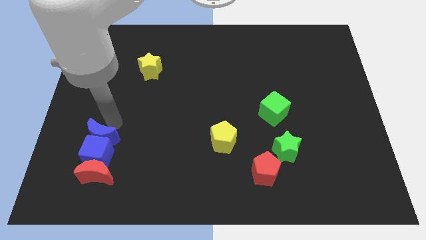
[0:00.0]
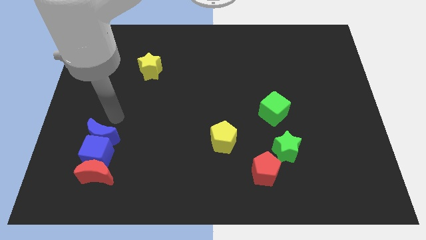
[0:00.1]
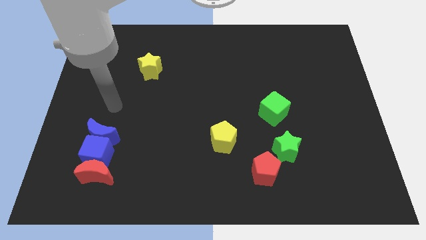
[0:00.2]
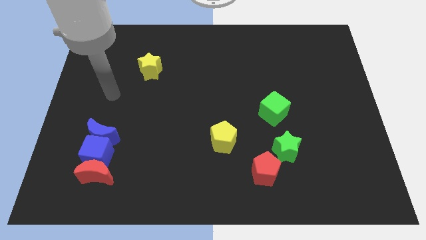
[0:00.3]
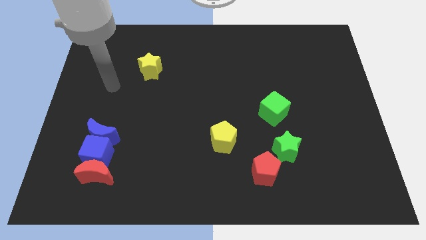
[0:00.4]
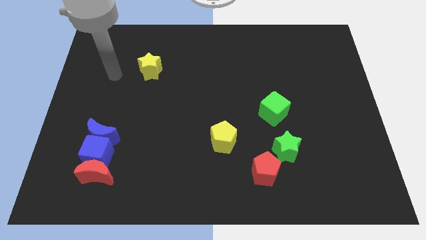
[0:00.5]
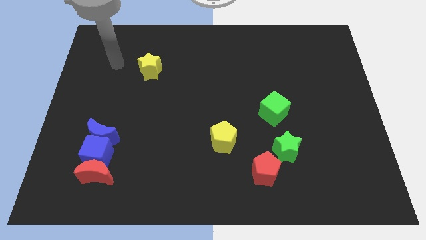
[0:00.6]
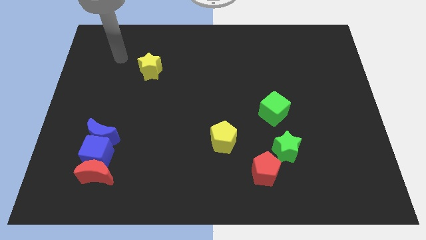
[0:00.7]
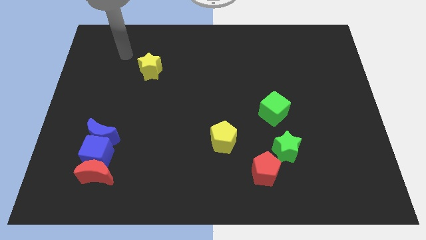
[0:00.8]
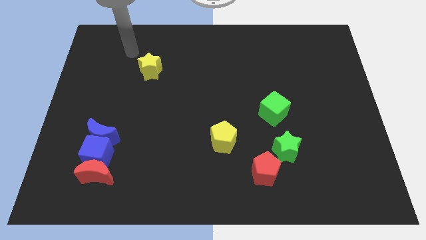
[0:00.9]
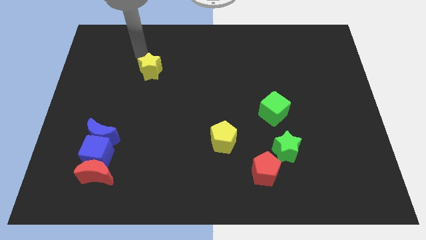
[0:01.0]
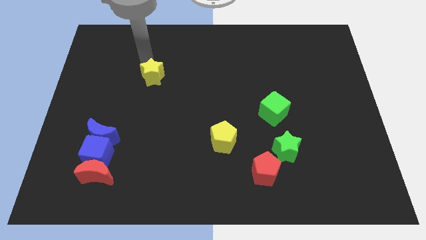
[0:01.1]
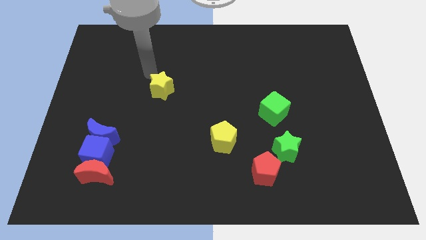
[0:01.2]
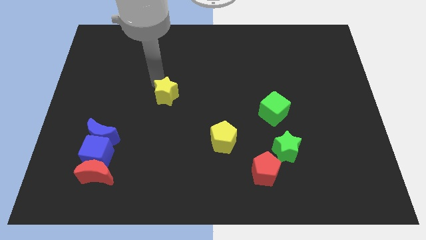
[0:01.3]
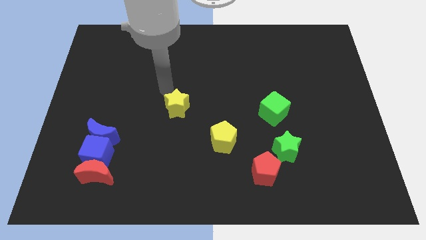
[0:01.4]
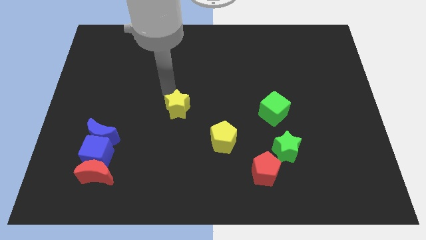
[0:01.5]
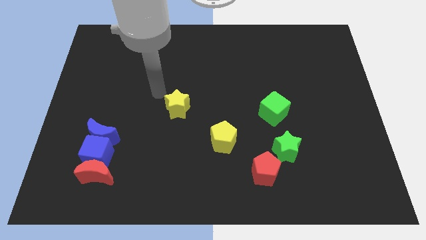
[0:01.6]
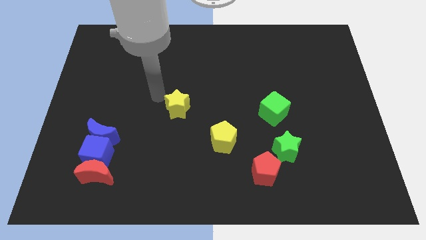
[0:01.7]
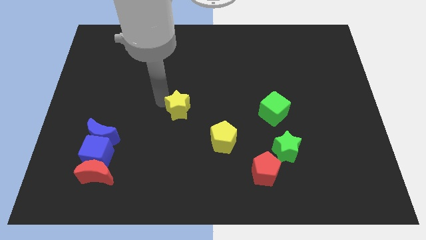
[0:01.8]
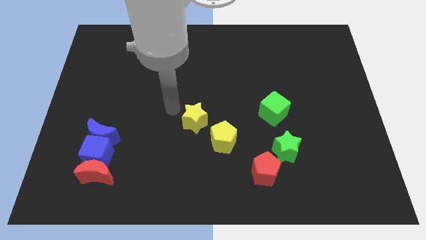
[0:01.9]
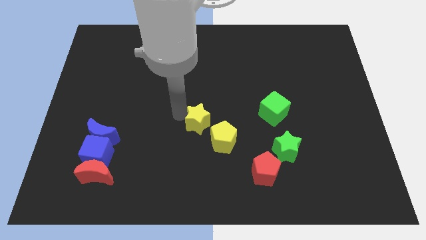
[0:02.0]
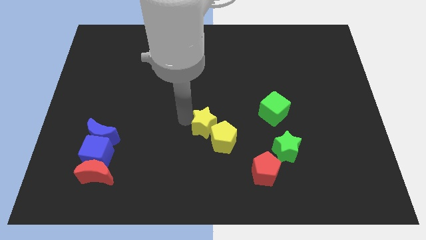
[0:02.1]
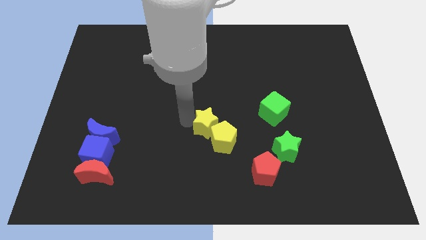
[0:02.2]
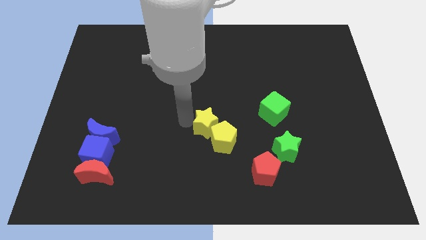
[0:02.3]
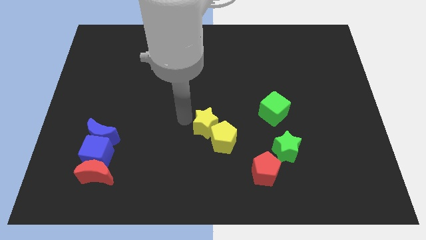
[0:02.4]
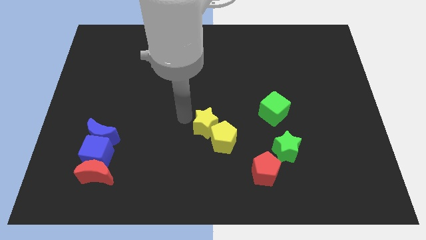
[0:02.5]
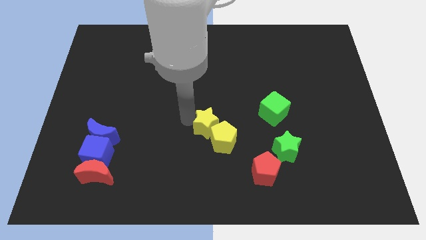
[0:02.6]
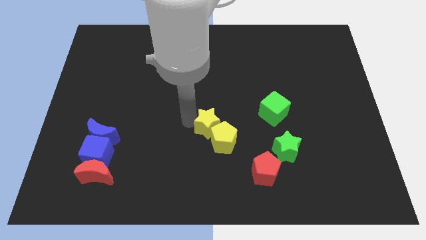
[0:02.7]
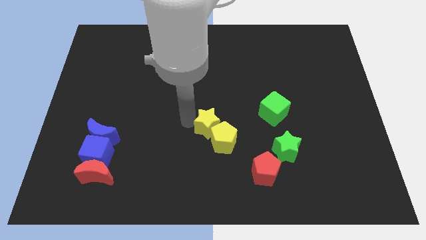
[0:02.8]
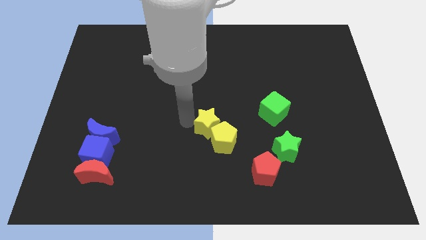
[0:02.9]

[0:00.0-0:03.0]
push the yellow star close to the yellow pentagon

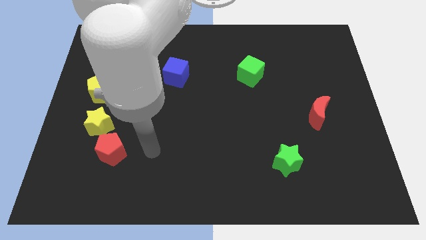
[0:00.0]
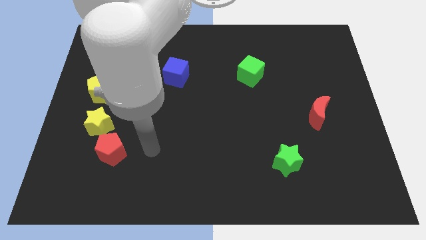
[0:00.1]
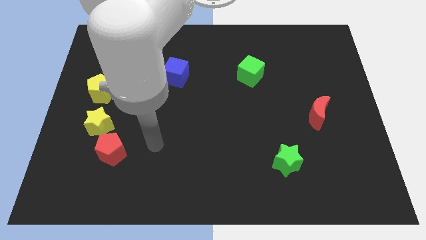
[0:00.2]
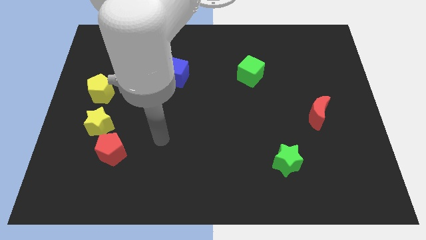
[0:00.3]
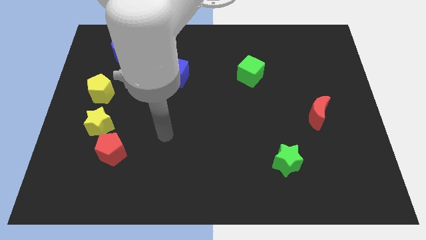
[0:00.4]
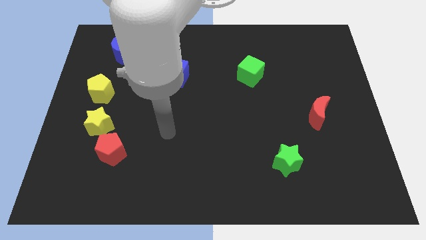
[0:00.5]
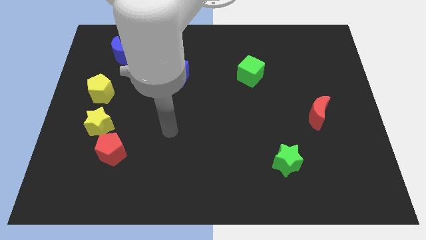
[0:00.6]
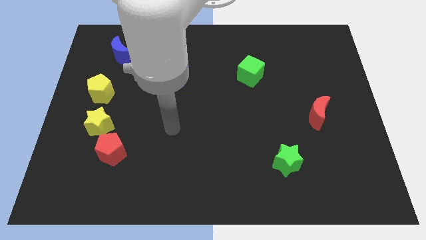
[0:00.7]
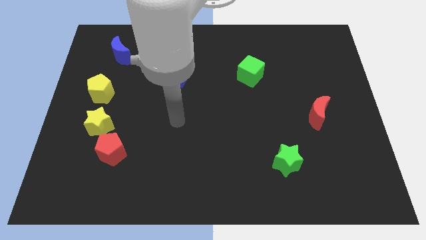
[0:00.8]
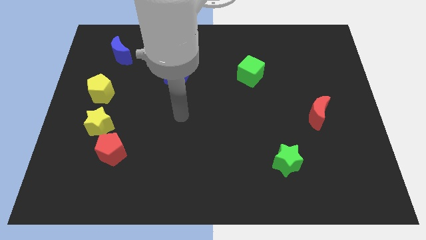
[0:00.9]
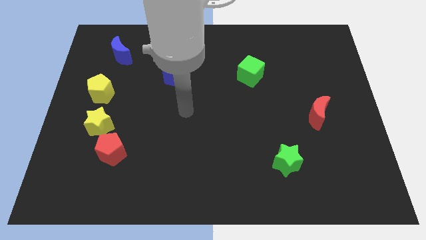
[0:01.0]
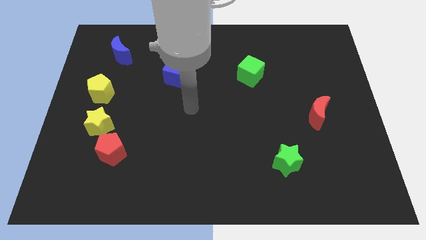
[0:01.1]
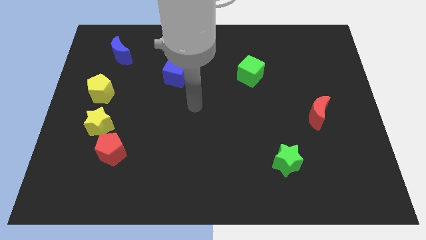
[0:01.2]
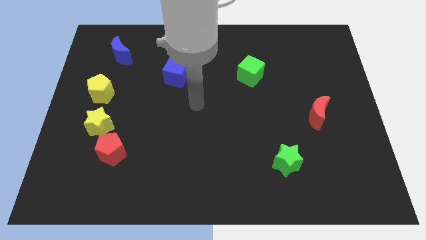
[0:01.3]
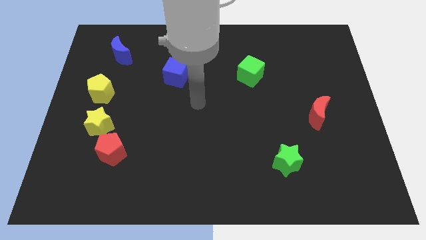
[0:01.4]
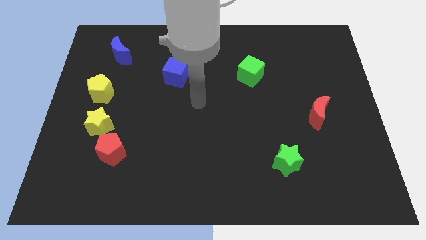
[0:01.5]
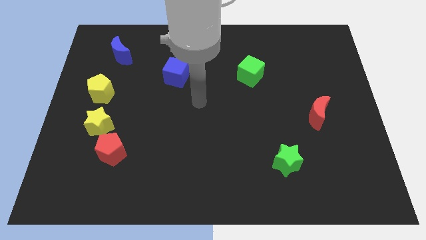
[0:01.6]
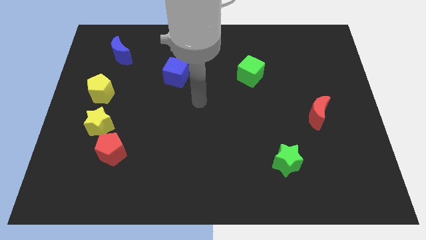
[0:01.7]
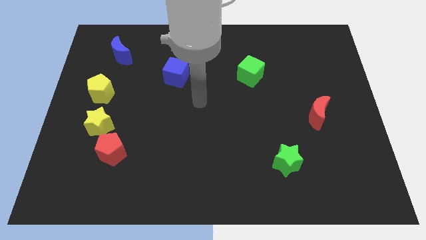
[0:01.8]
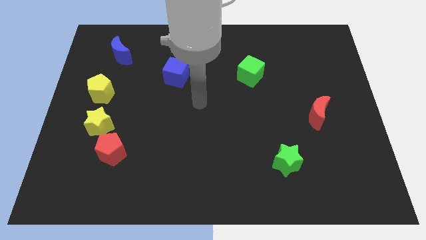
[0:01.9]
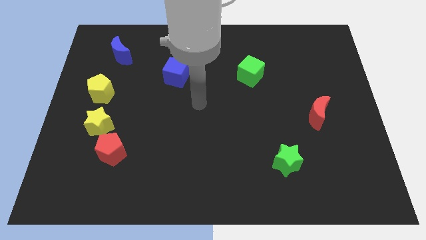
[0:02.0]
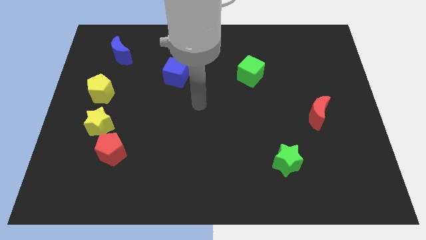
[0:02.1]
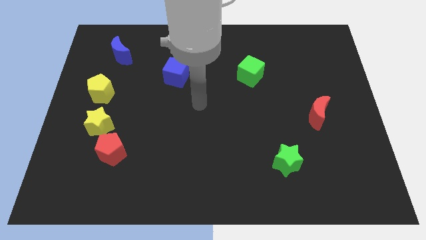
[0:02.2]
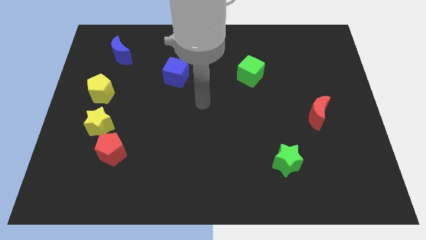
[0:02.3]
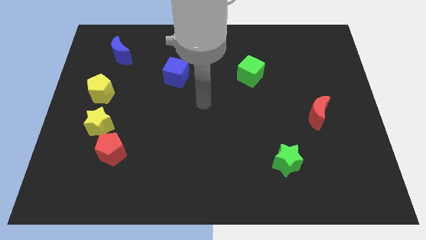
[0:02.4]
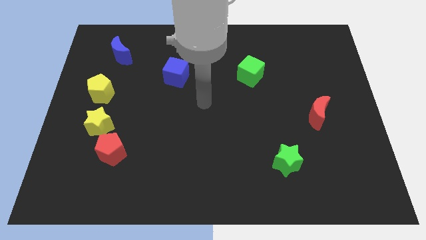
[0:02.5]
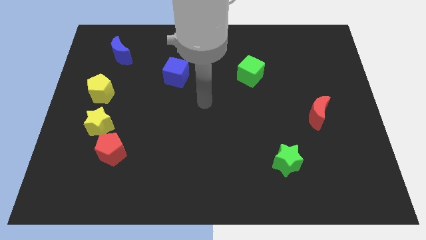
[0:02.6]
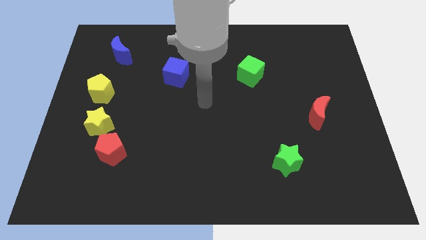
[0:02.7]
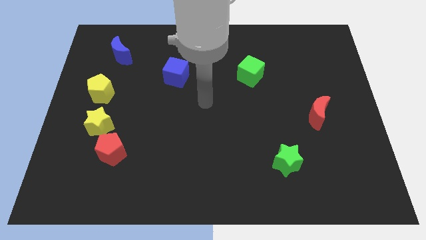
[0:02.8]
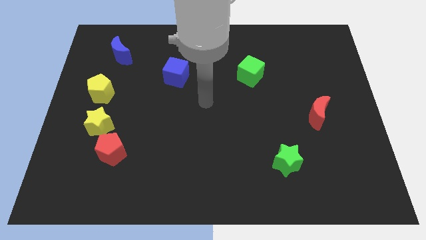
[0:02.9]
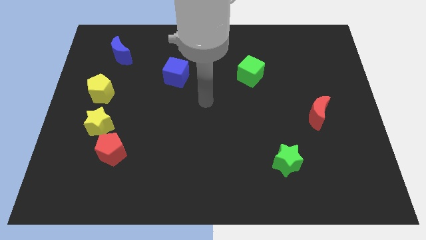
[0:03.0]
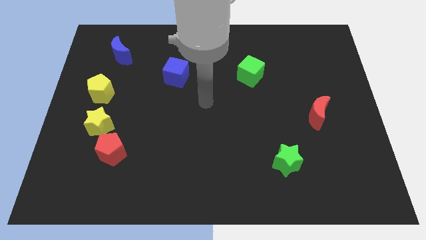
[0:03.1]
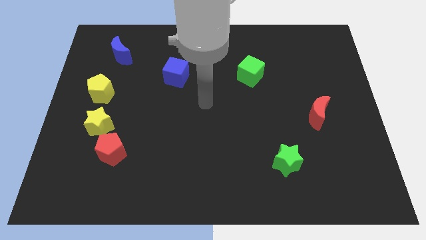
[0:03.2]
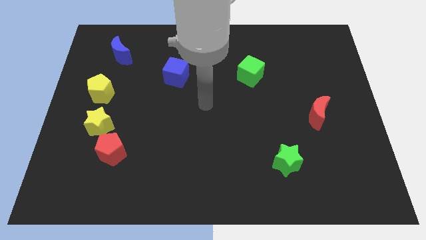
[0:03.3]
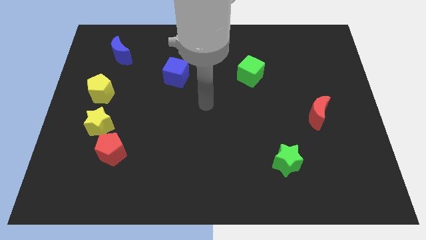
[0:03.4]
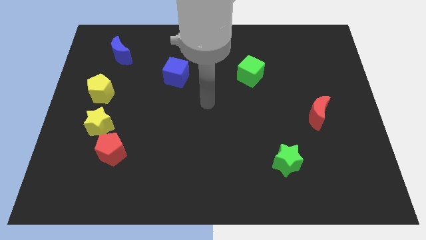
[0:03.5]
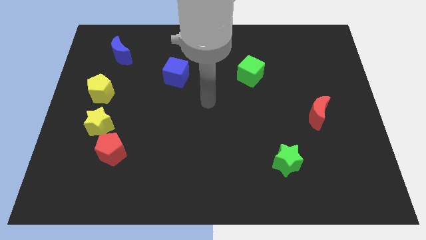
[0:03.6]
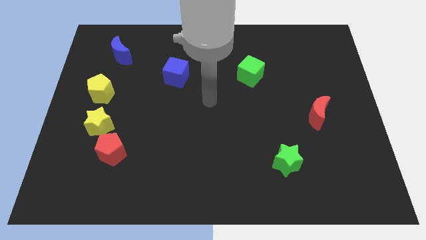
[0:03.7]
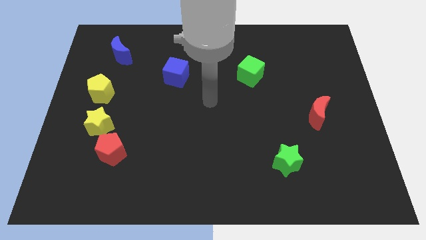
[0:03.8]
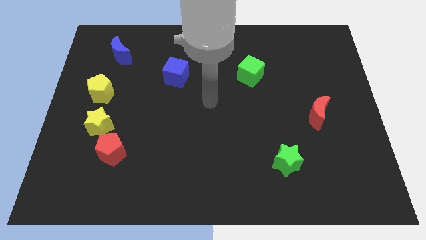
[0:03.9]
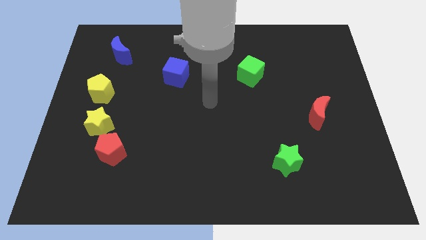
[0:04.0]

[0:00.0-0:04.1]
move your arm to the center of the board

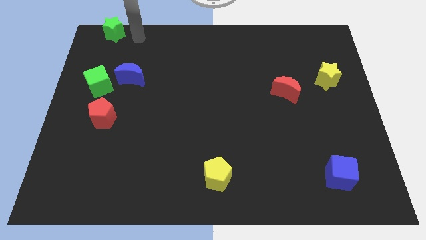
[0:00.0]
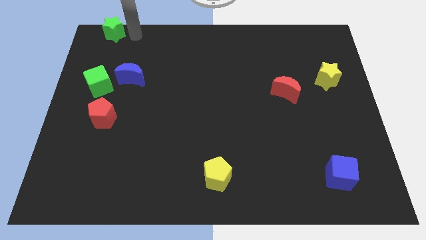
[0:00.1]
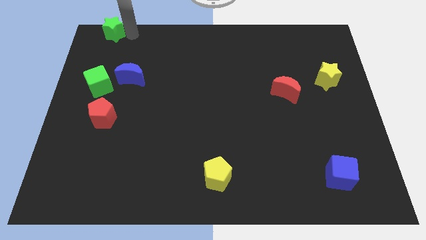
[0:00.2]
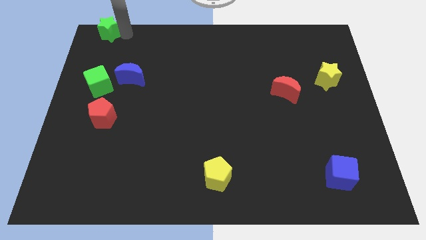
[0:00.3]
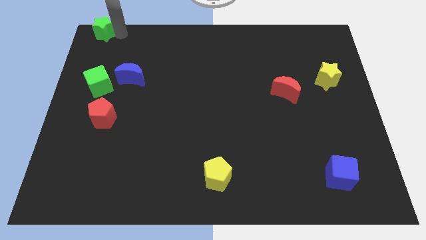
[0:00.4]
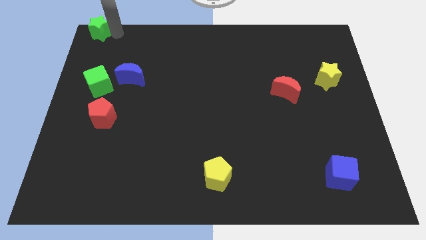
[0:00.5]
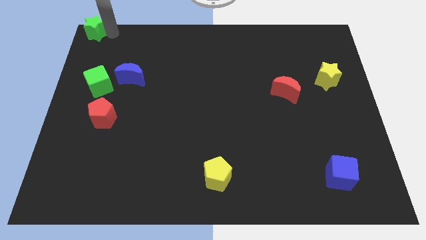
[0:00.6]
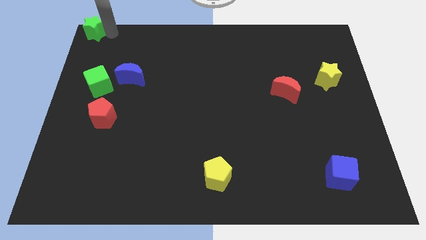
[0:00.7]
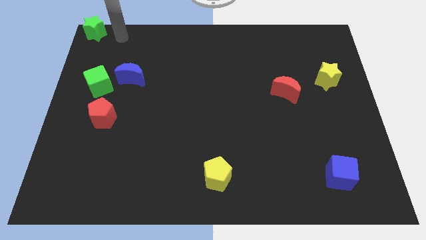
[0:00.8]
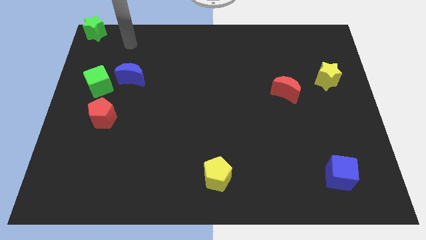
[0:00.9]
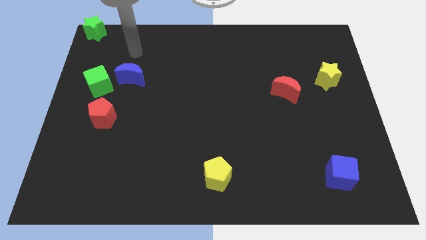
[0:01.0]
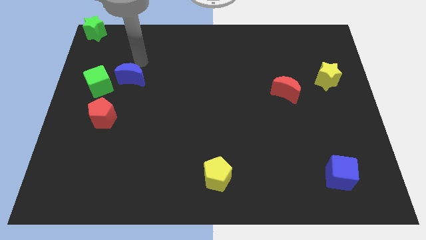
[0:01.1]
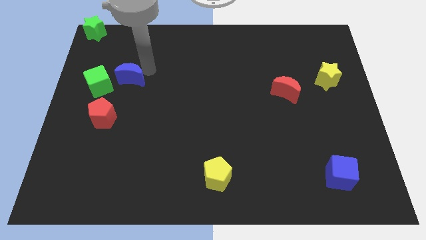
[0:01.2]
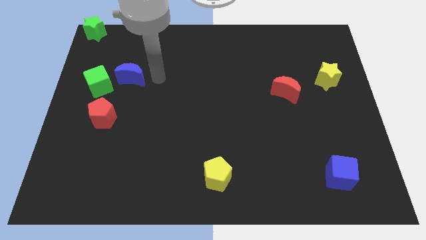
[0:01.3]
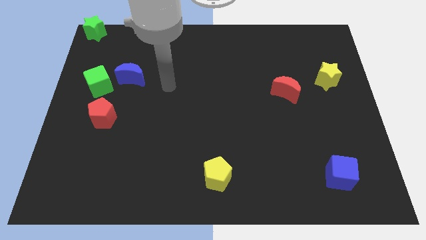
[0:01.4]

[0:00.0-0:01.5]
move the green star to the top left corner

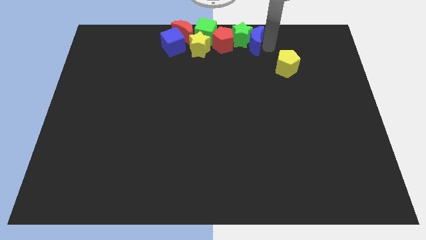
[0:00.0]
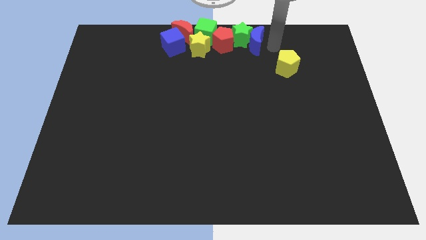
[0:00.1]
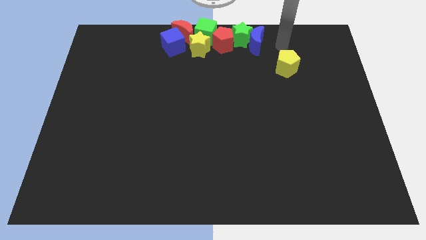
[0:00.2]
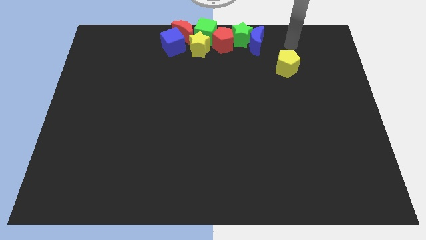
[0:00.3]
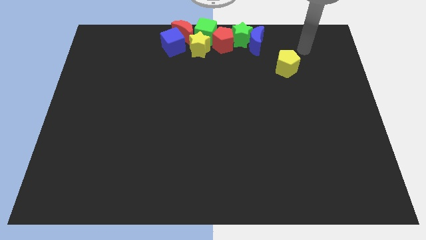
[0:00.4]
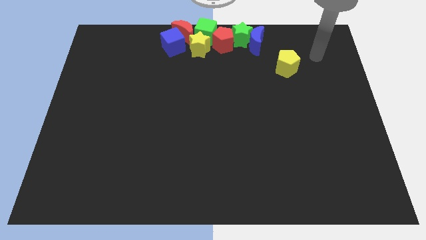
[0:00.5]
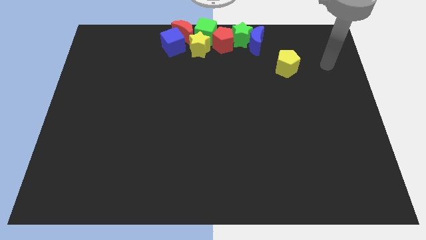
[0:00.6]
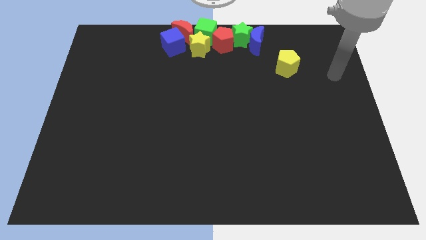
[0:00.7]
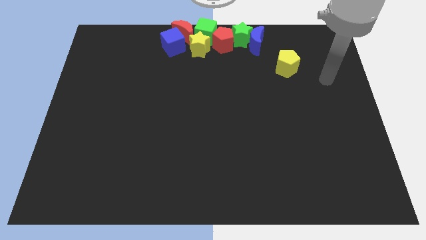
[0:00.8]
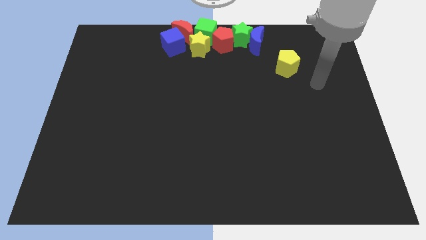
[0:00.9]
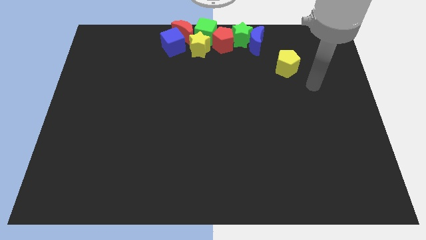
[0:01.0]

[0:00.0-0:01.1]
move the arm away from the blue moon
